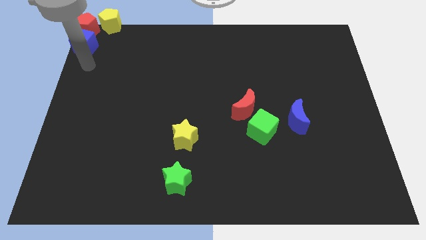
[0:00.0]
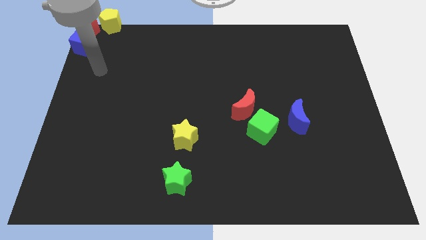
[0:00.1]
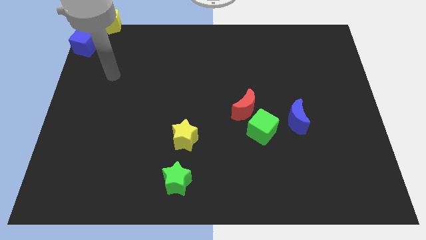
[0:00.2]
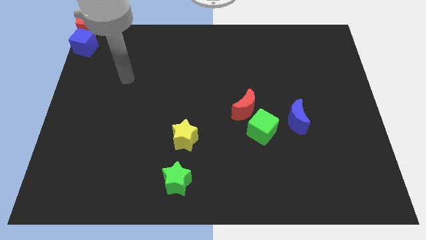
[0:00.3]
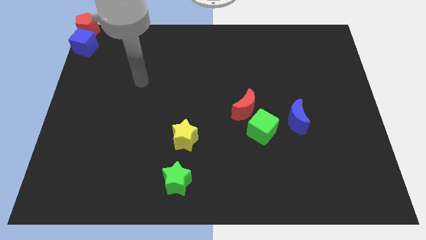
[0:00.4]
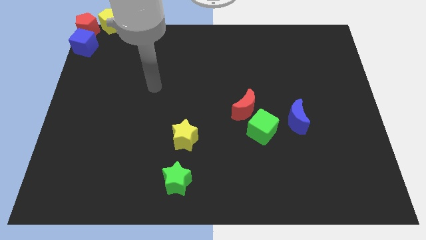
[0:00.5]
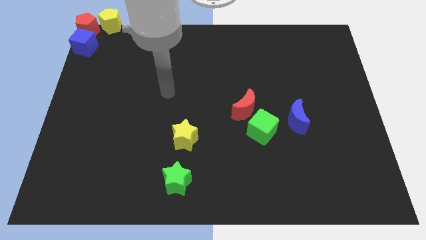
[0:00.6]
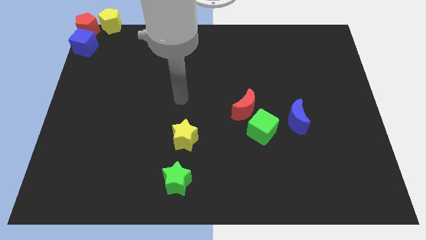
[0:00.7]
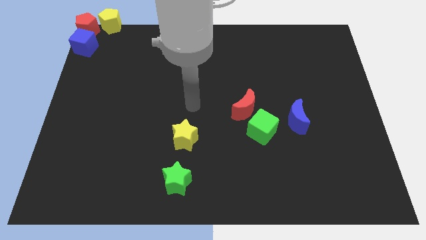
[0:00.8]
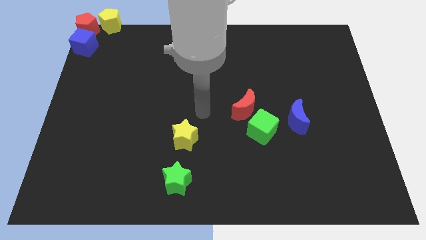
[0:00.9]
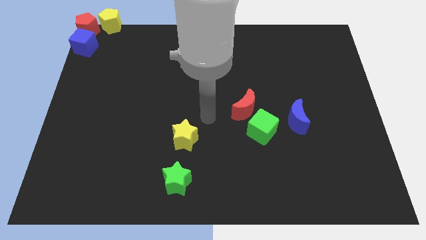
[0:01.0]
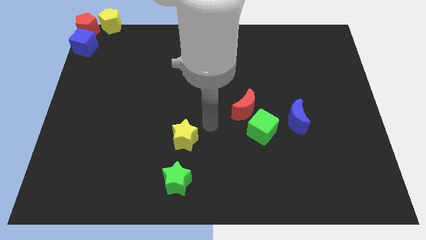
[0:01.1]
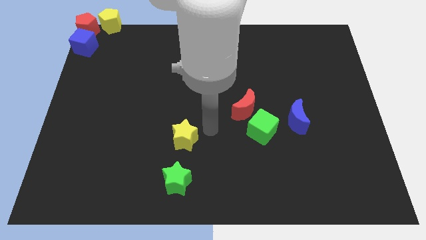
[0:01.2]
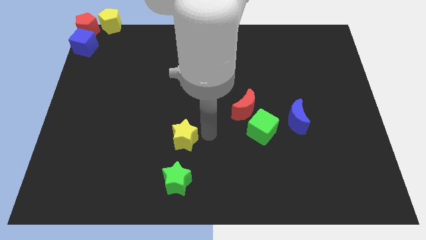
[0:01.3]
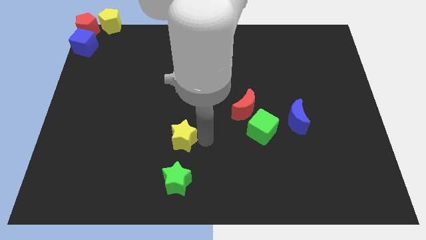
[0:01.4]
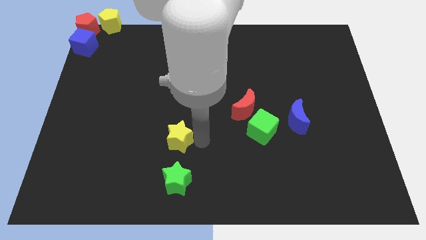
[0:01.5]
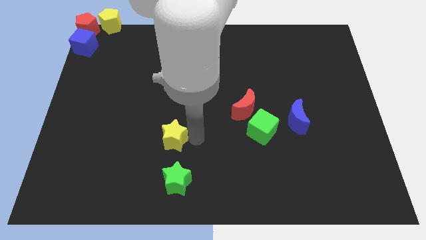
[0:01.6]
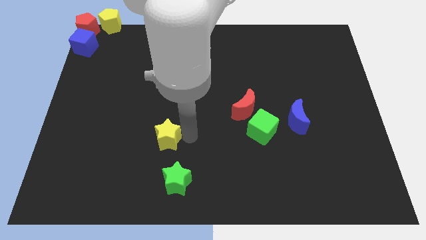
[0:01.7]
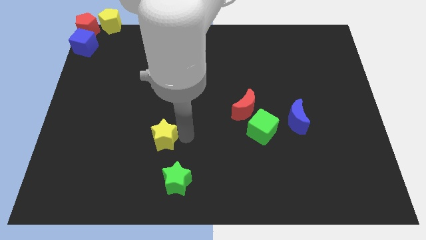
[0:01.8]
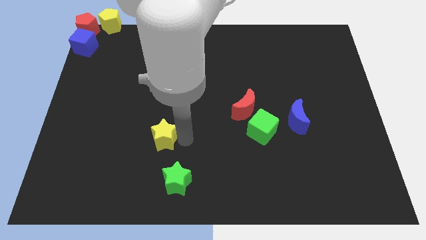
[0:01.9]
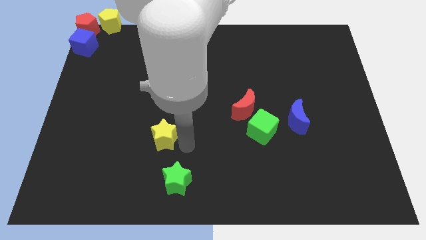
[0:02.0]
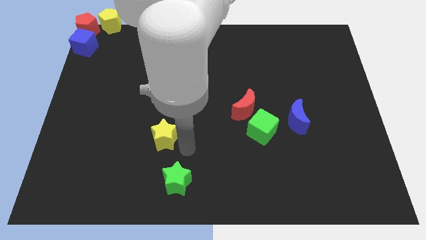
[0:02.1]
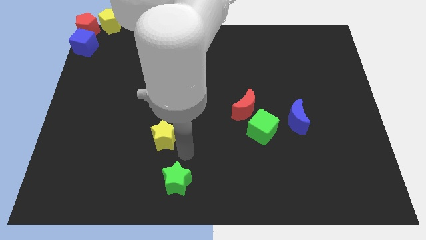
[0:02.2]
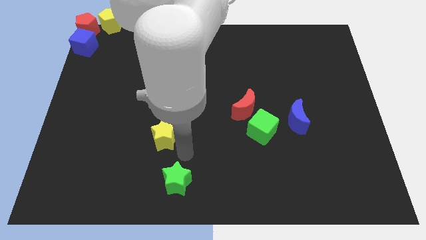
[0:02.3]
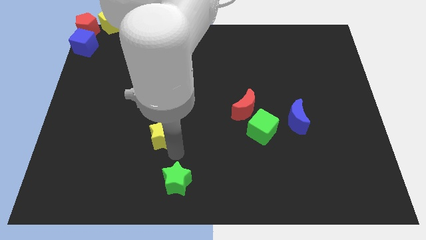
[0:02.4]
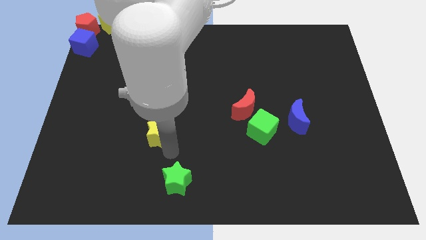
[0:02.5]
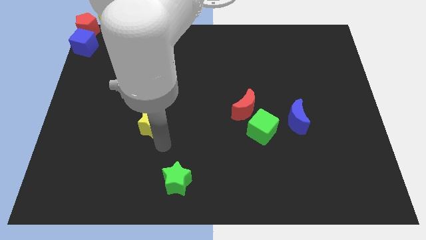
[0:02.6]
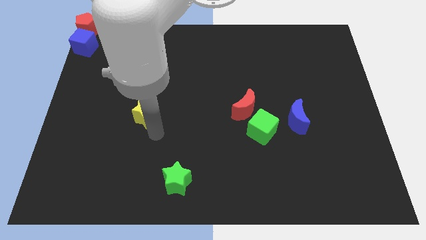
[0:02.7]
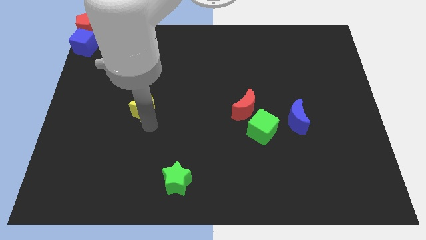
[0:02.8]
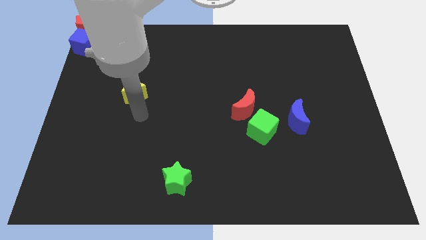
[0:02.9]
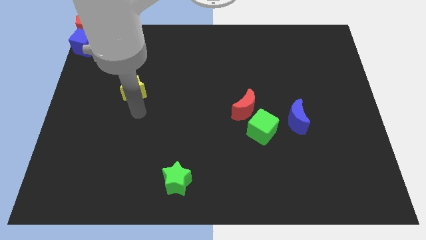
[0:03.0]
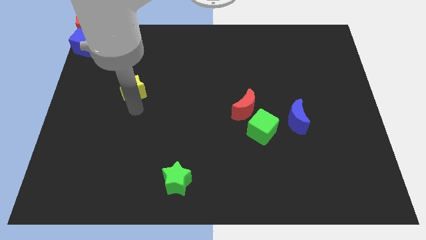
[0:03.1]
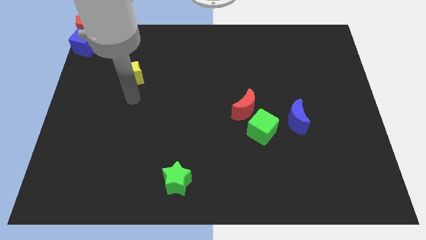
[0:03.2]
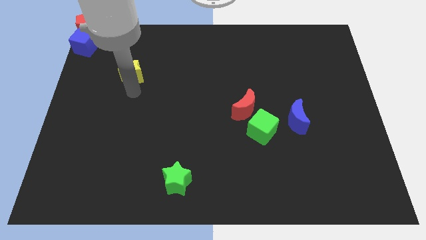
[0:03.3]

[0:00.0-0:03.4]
move the yellow star diagonally top left to the green star

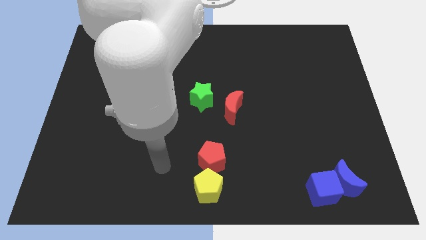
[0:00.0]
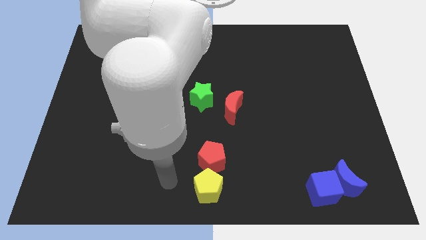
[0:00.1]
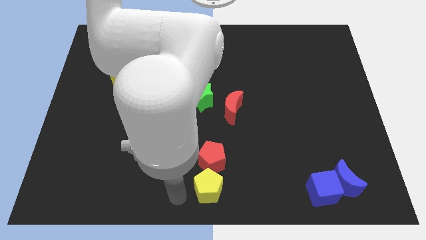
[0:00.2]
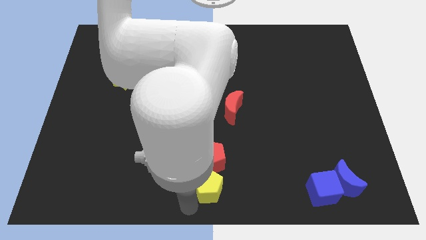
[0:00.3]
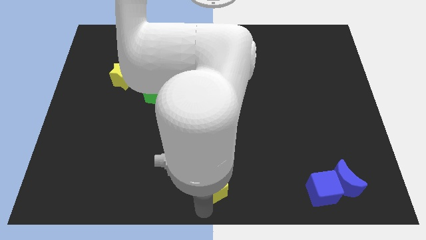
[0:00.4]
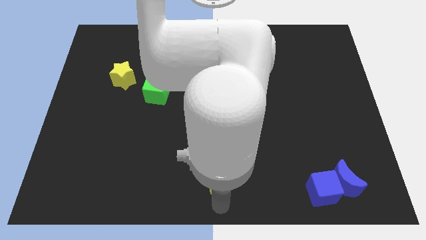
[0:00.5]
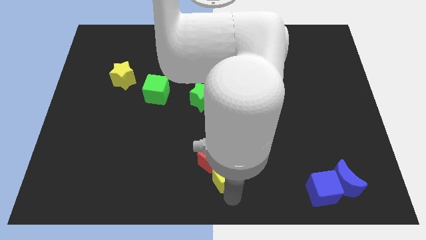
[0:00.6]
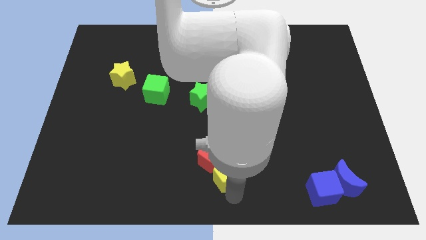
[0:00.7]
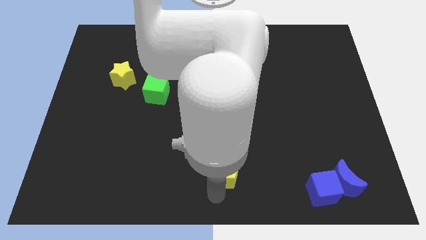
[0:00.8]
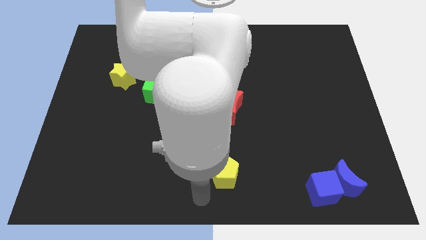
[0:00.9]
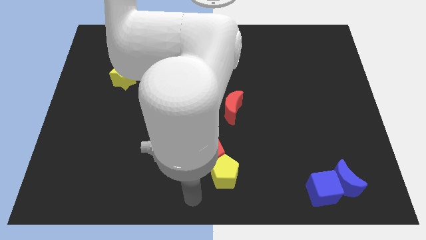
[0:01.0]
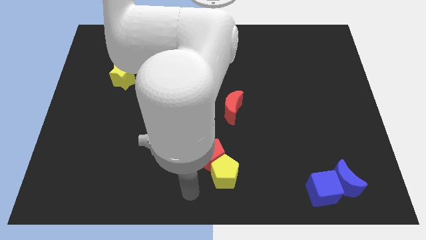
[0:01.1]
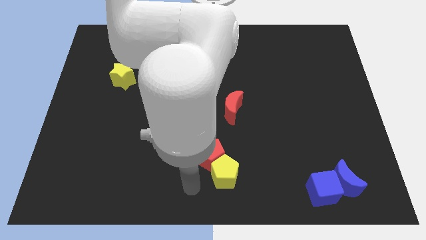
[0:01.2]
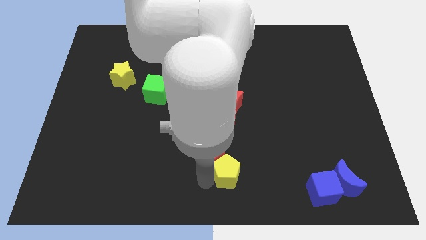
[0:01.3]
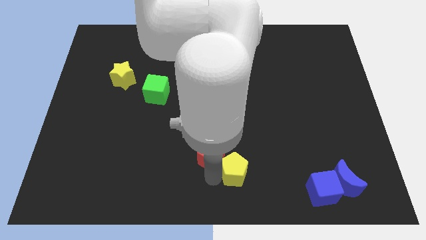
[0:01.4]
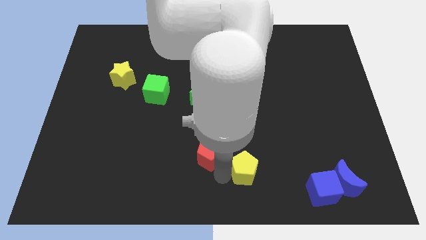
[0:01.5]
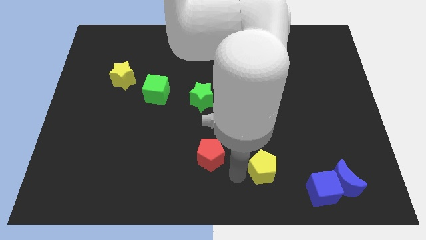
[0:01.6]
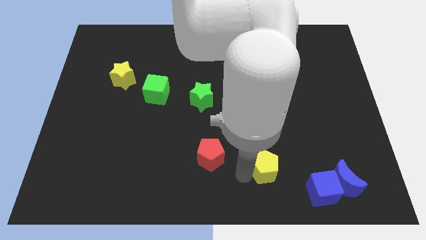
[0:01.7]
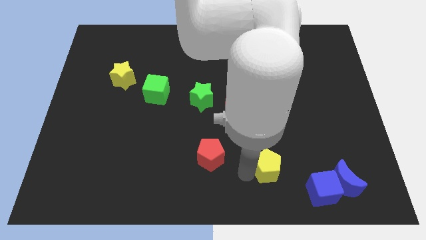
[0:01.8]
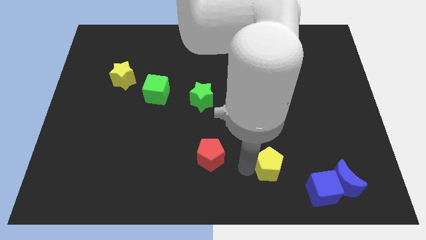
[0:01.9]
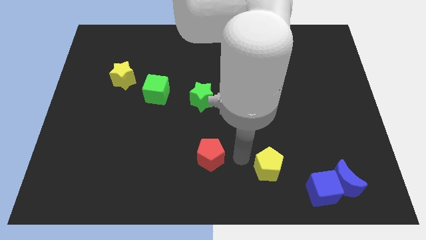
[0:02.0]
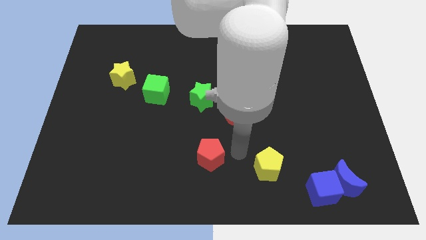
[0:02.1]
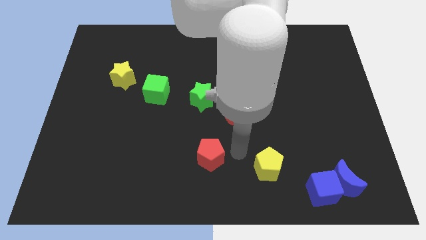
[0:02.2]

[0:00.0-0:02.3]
separate the yellow pentagon from the red pentagon

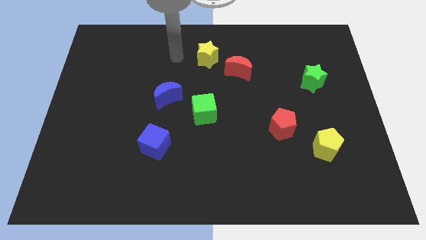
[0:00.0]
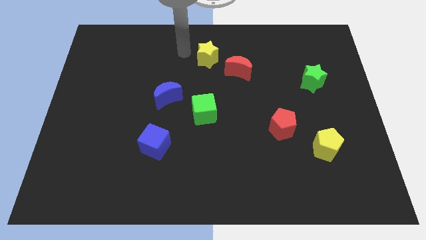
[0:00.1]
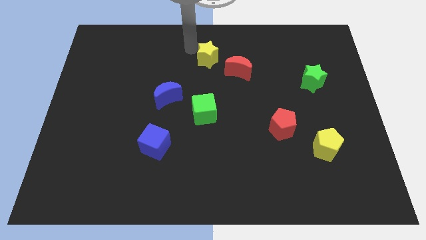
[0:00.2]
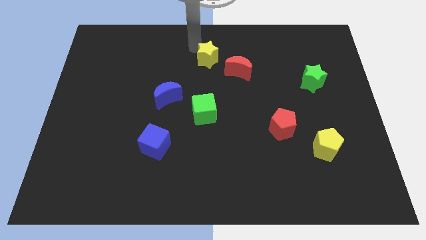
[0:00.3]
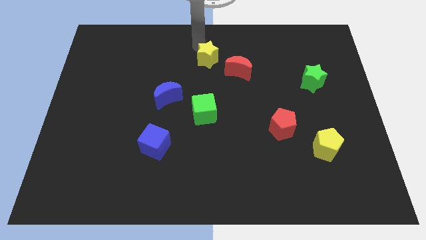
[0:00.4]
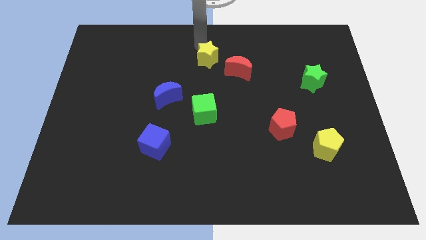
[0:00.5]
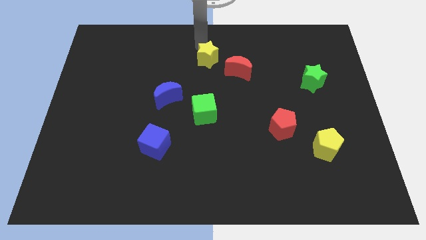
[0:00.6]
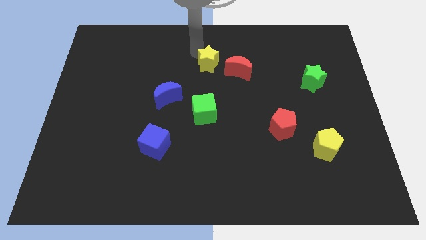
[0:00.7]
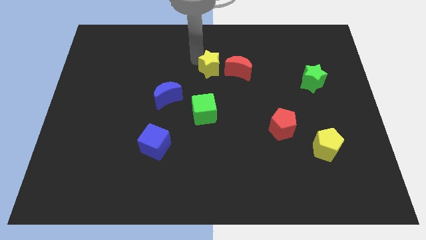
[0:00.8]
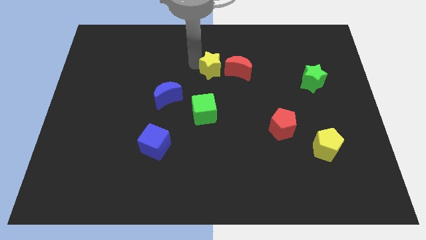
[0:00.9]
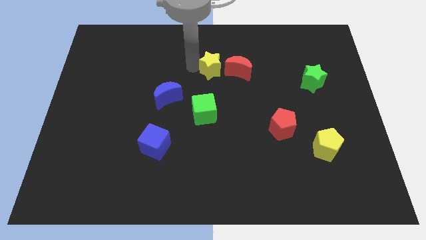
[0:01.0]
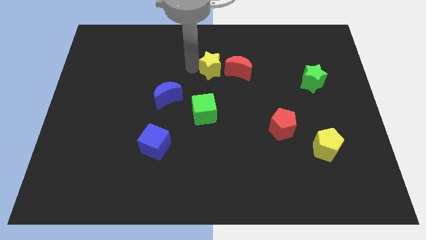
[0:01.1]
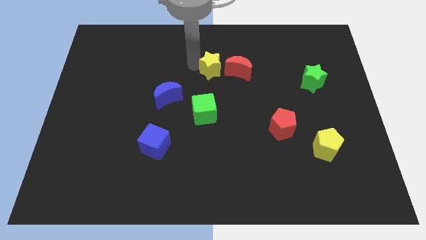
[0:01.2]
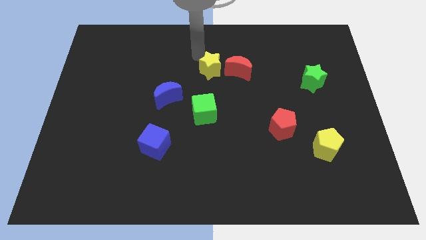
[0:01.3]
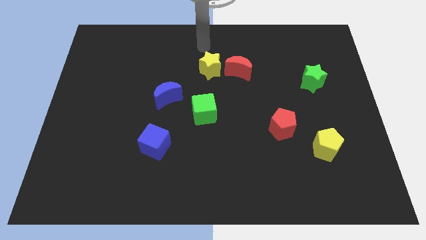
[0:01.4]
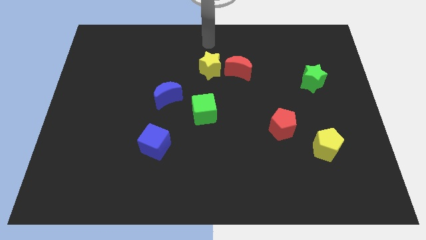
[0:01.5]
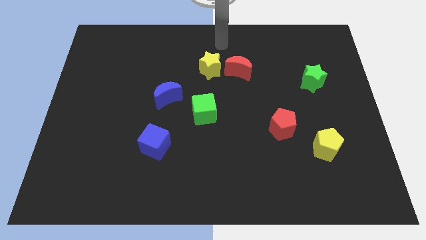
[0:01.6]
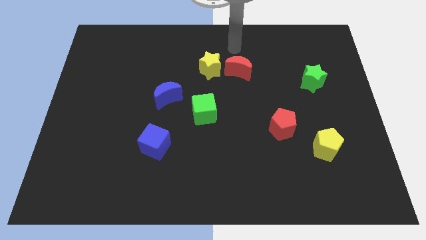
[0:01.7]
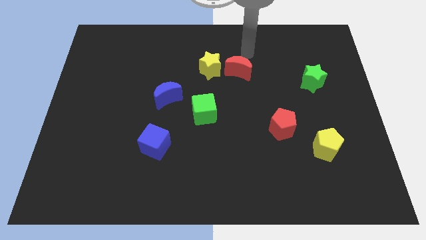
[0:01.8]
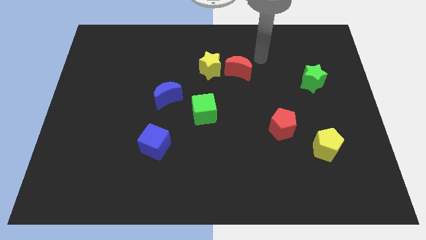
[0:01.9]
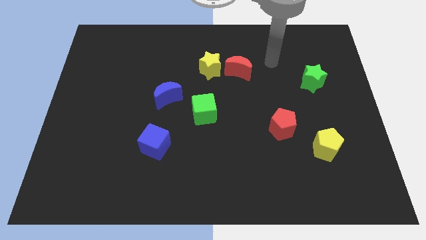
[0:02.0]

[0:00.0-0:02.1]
place the yellow star left to the red moon

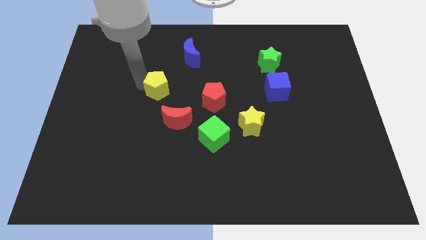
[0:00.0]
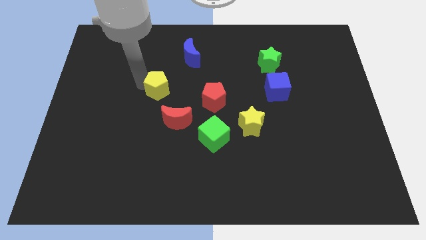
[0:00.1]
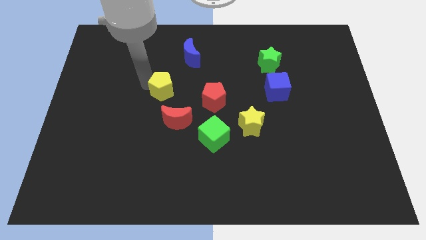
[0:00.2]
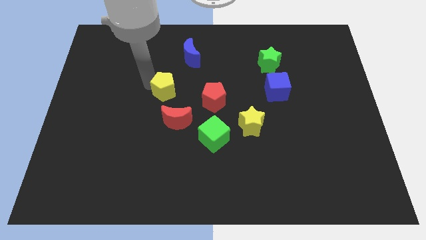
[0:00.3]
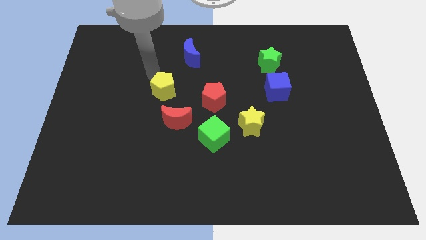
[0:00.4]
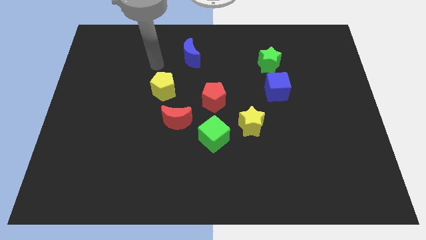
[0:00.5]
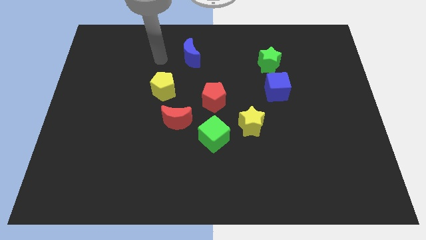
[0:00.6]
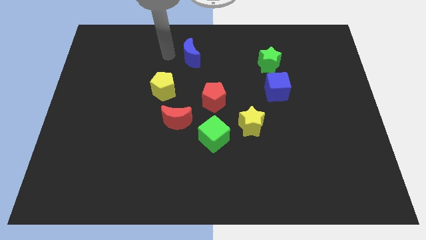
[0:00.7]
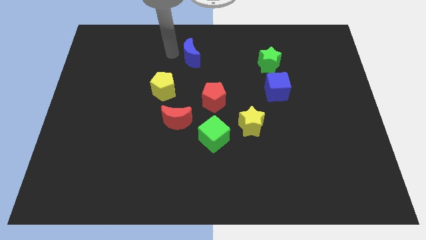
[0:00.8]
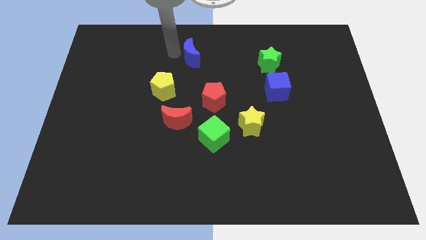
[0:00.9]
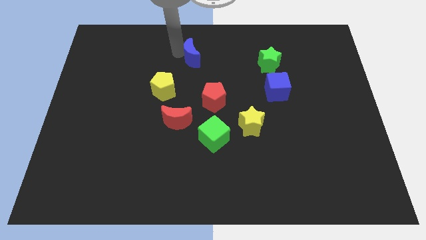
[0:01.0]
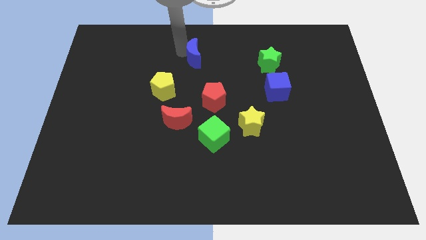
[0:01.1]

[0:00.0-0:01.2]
move the blue crescent slightly top to the red pentagon
